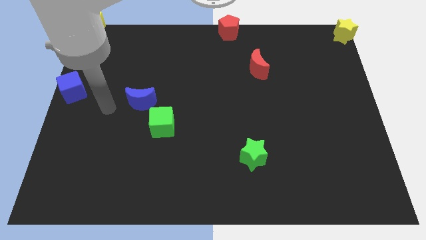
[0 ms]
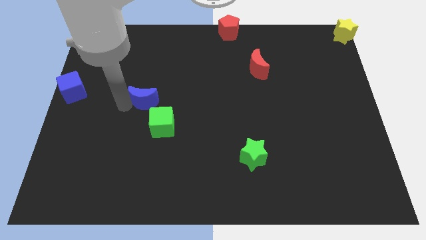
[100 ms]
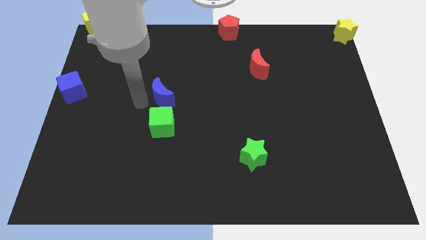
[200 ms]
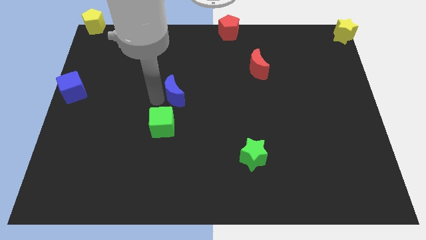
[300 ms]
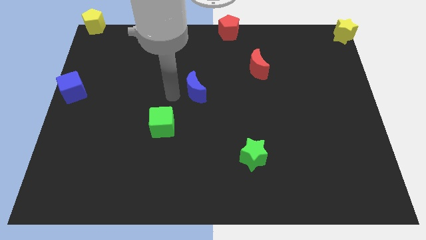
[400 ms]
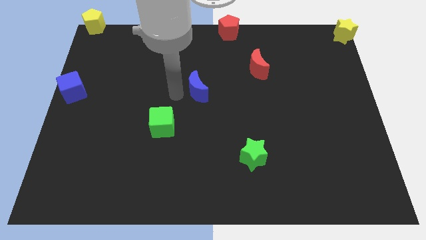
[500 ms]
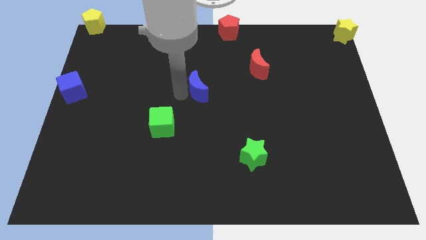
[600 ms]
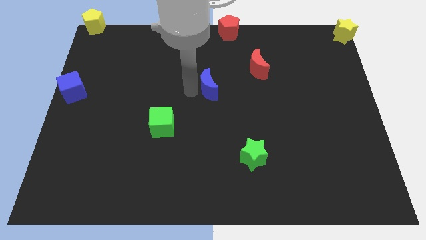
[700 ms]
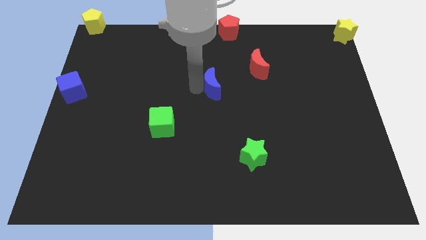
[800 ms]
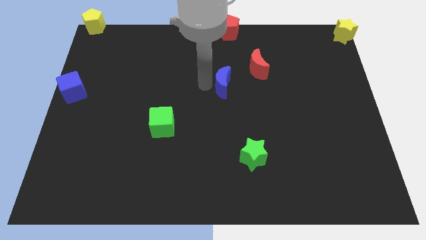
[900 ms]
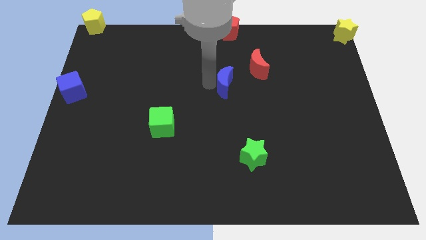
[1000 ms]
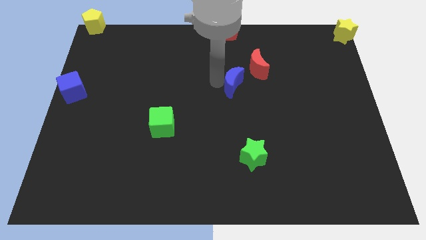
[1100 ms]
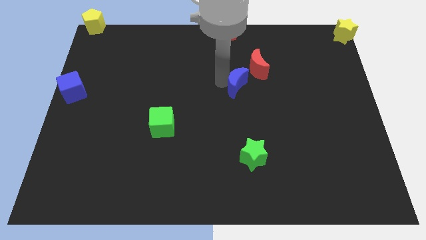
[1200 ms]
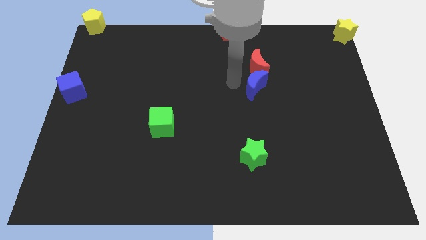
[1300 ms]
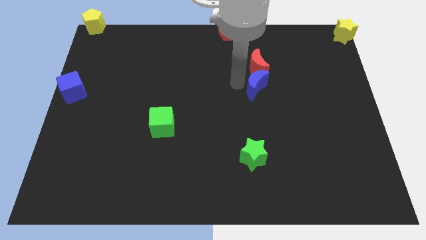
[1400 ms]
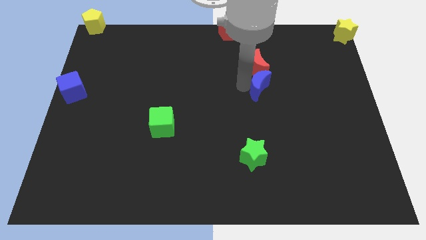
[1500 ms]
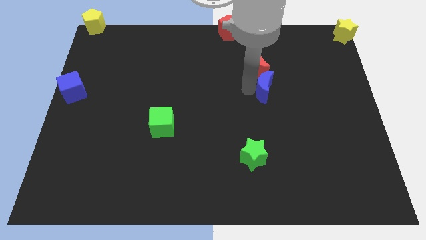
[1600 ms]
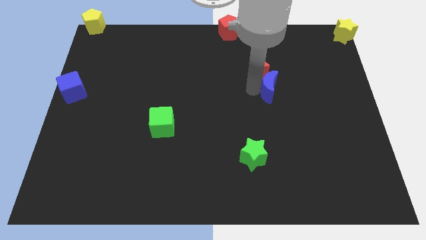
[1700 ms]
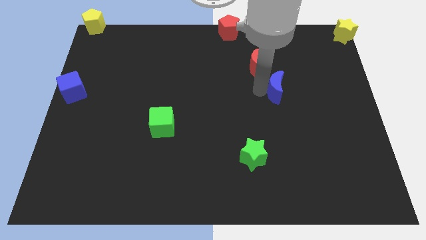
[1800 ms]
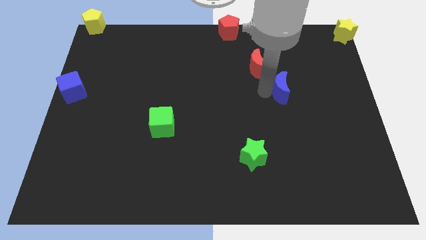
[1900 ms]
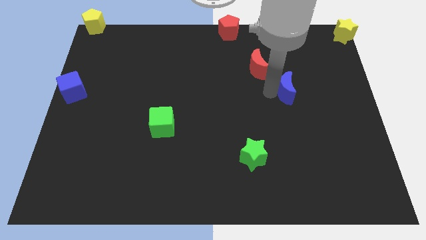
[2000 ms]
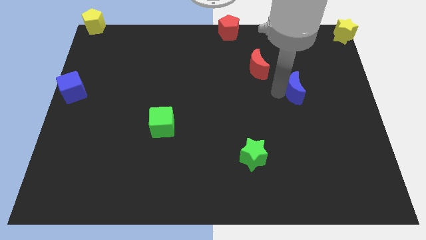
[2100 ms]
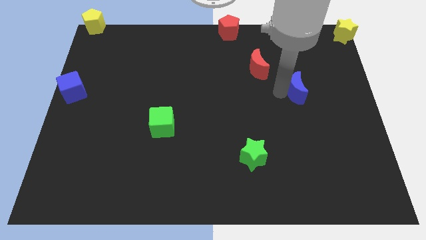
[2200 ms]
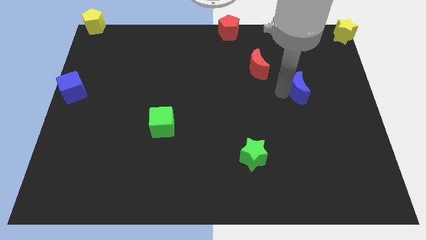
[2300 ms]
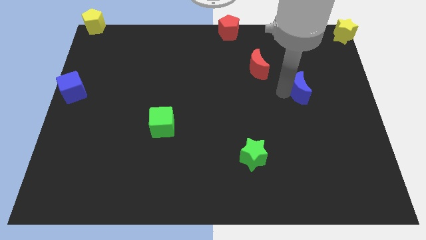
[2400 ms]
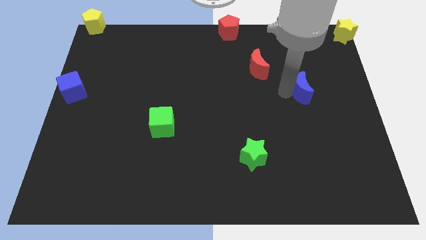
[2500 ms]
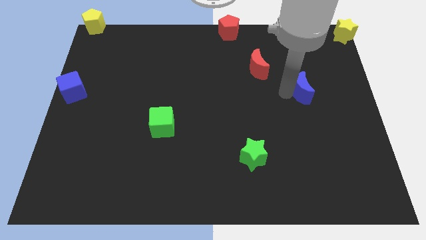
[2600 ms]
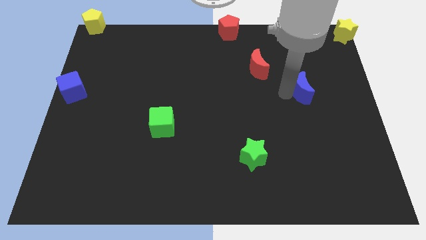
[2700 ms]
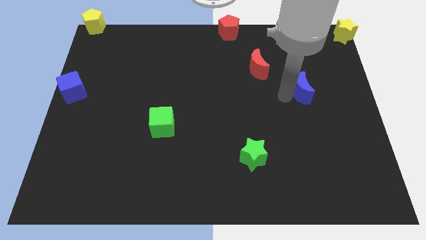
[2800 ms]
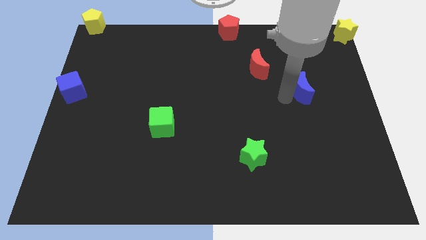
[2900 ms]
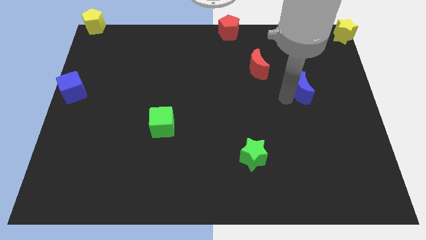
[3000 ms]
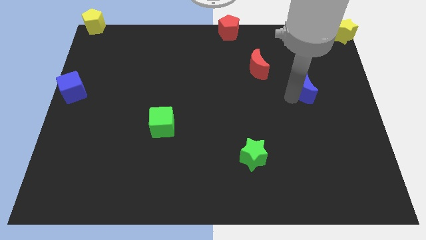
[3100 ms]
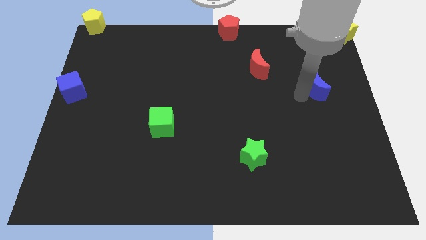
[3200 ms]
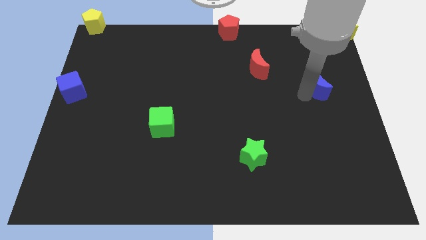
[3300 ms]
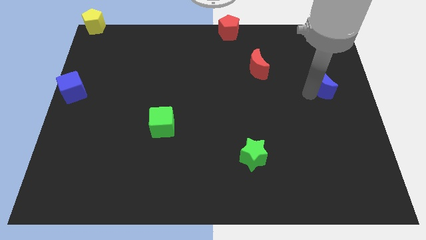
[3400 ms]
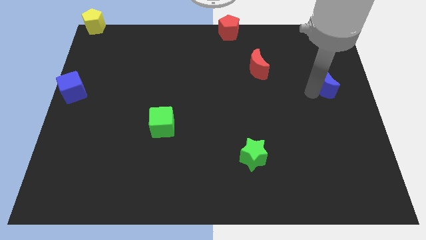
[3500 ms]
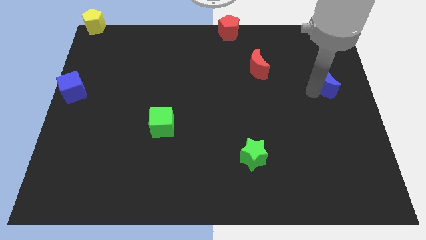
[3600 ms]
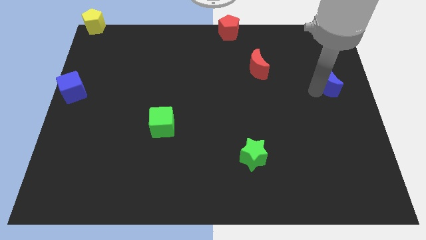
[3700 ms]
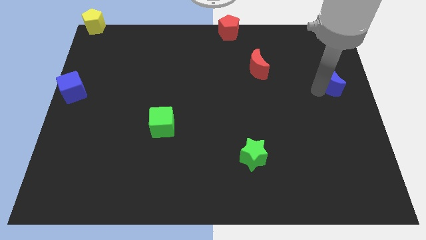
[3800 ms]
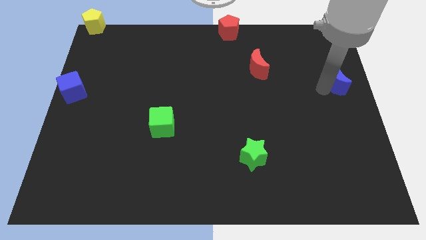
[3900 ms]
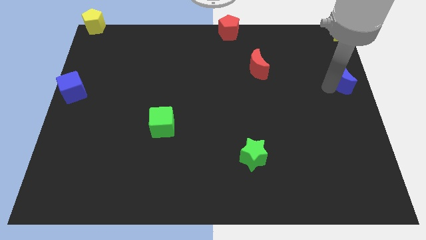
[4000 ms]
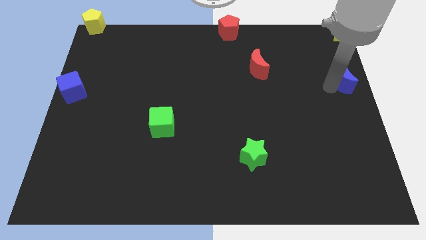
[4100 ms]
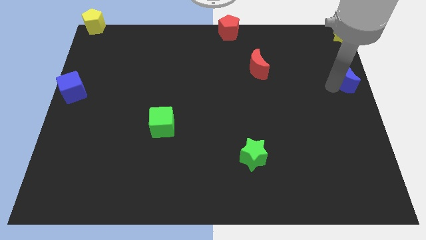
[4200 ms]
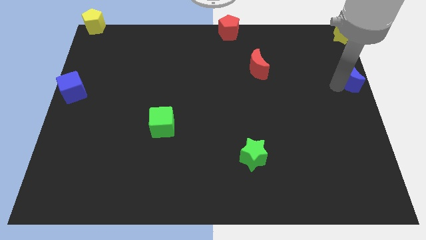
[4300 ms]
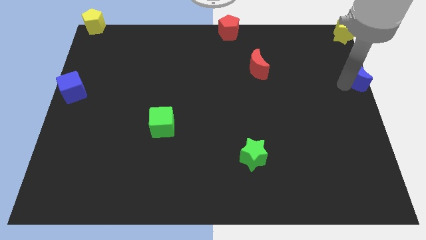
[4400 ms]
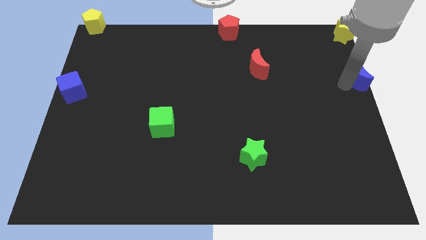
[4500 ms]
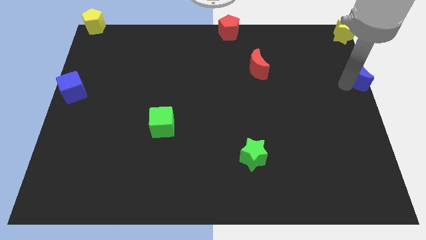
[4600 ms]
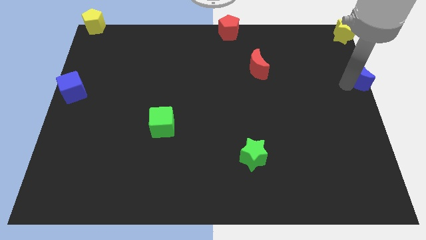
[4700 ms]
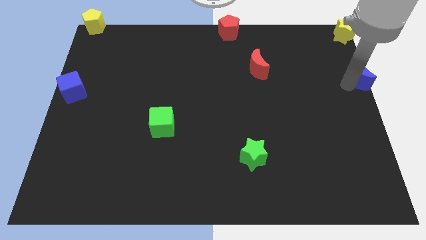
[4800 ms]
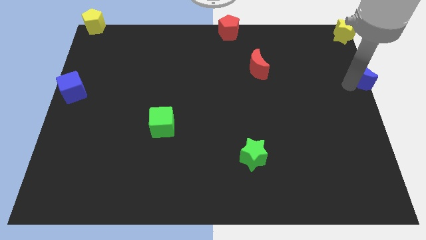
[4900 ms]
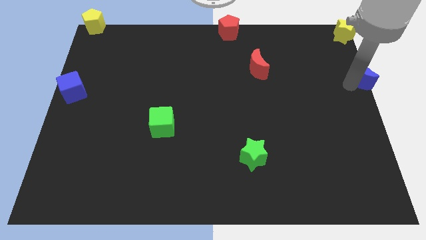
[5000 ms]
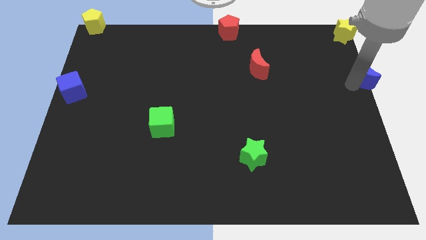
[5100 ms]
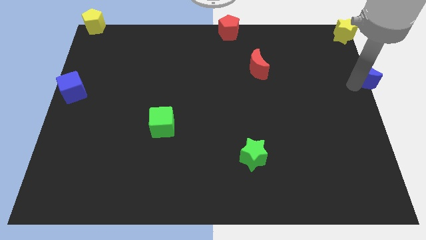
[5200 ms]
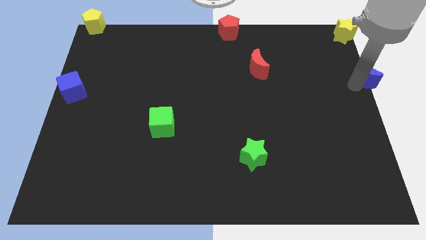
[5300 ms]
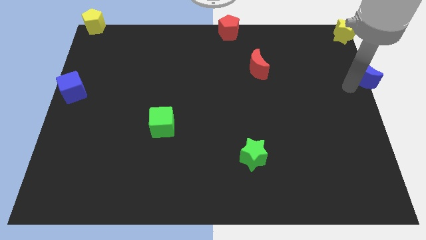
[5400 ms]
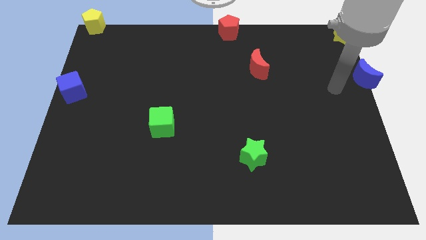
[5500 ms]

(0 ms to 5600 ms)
push the blue moon down to the yellow star

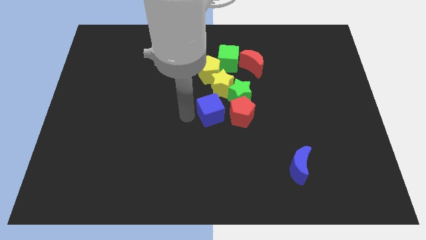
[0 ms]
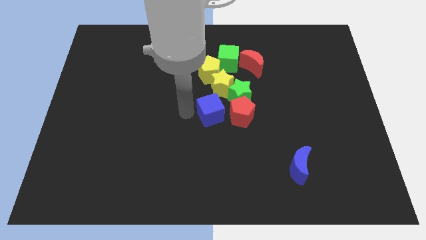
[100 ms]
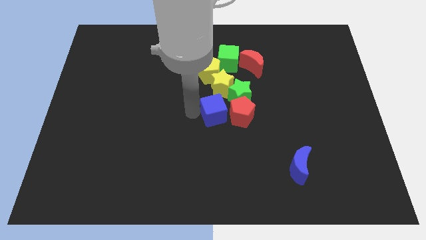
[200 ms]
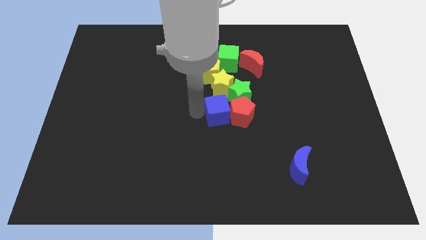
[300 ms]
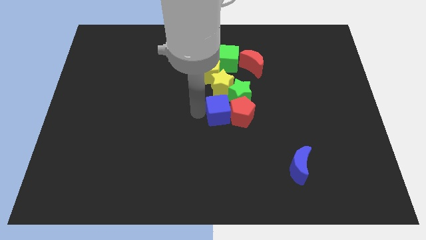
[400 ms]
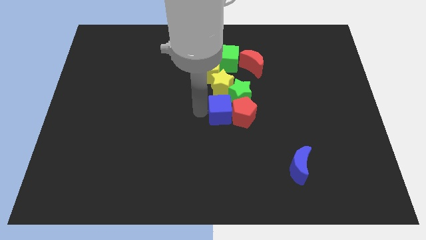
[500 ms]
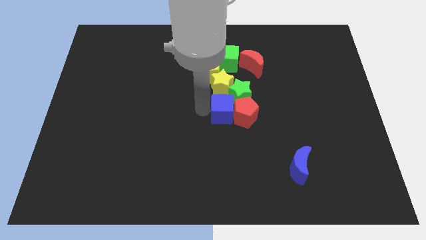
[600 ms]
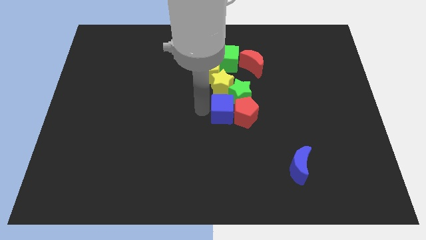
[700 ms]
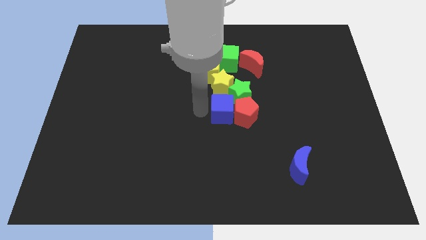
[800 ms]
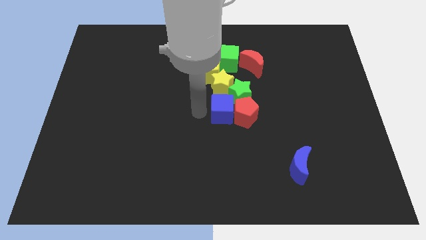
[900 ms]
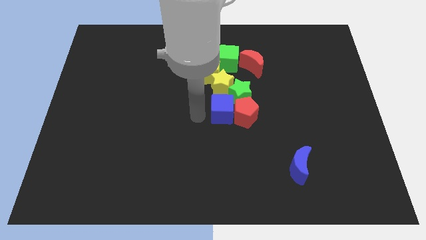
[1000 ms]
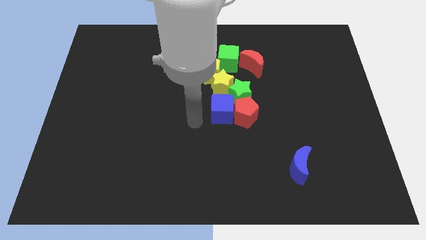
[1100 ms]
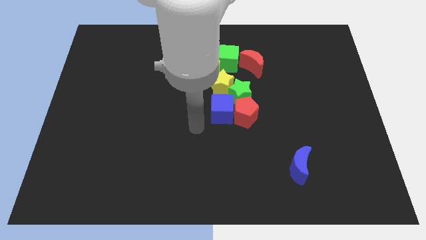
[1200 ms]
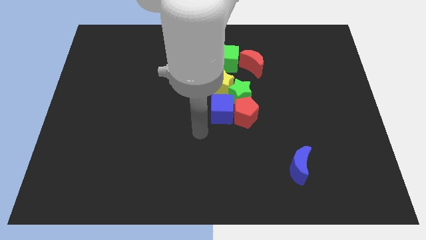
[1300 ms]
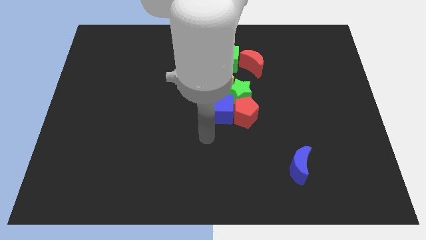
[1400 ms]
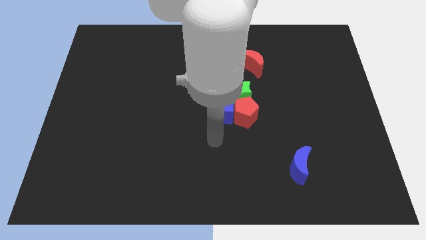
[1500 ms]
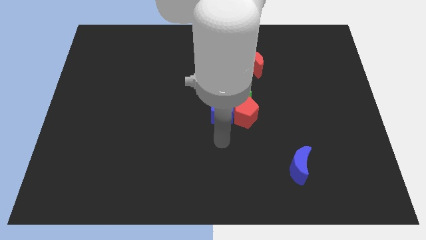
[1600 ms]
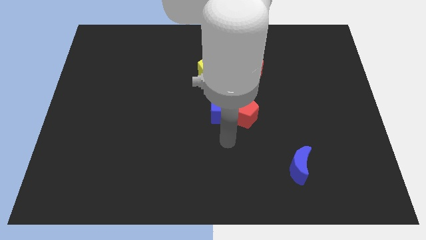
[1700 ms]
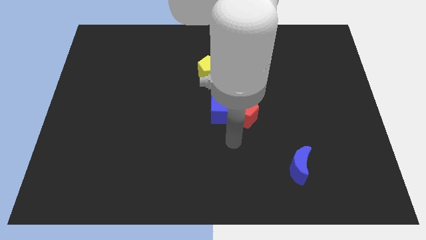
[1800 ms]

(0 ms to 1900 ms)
slightly touch red pentagon with blue cube

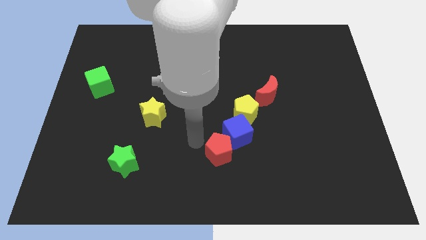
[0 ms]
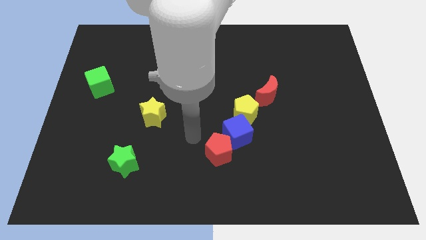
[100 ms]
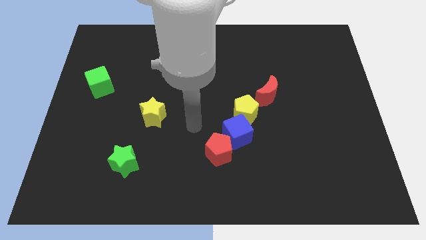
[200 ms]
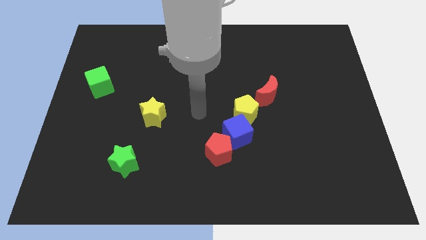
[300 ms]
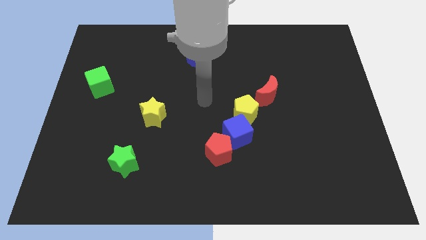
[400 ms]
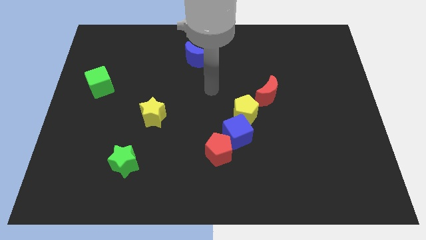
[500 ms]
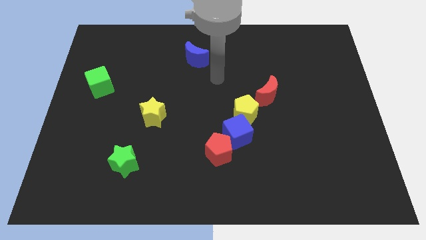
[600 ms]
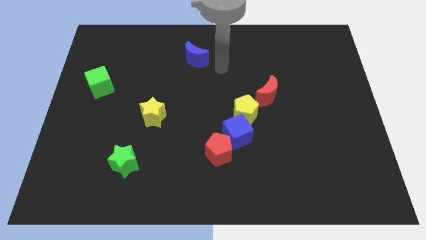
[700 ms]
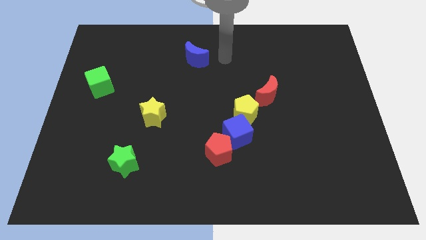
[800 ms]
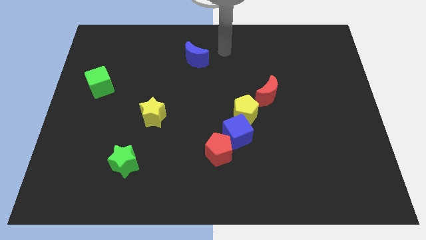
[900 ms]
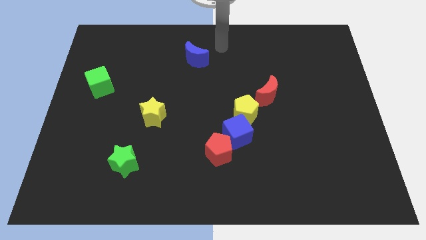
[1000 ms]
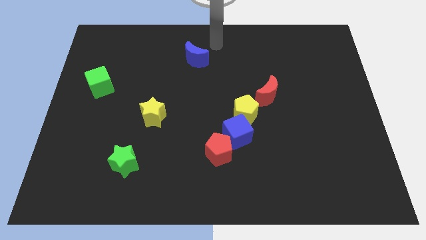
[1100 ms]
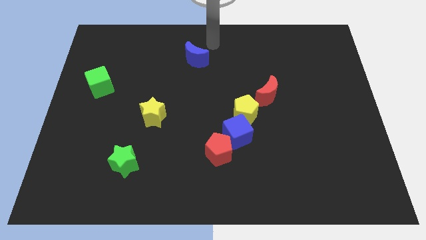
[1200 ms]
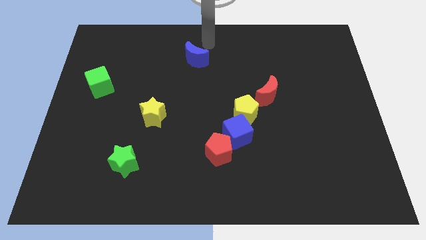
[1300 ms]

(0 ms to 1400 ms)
move away from the red pentagon
